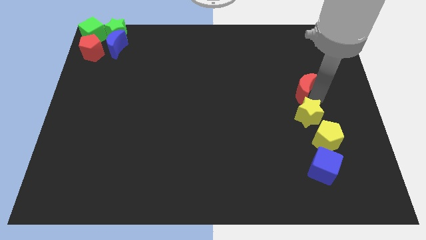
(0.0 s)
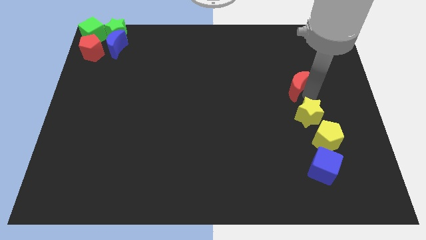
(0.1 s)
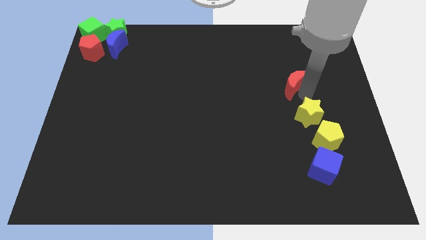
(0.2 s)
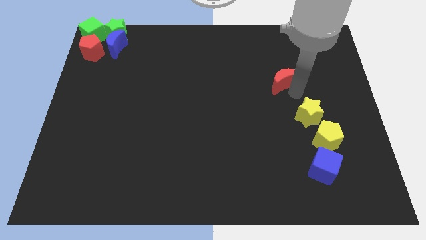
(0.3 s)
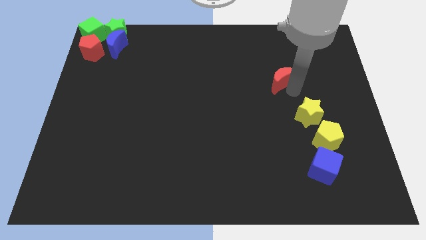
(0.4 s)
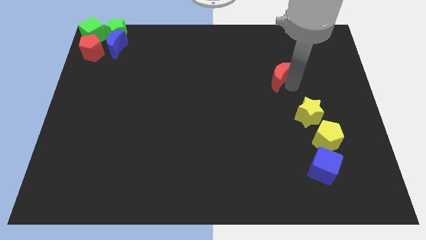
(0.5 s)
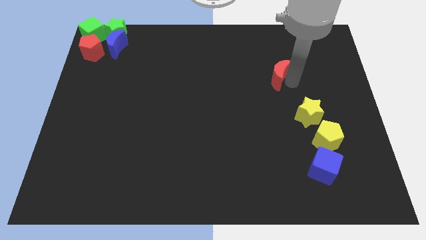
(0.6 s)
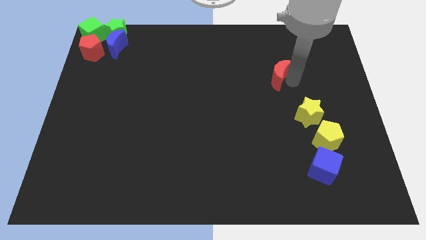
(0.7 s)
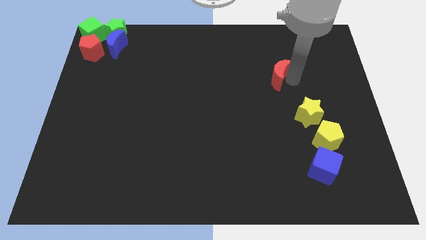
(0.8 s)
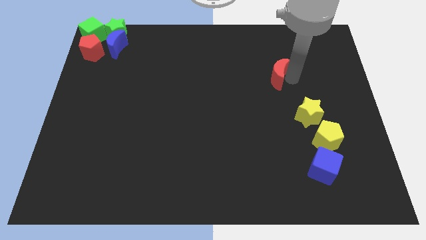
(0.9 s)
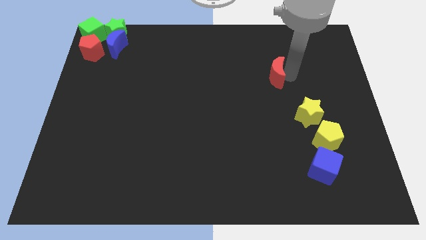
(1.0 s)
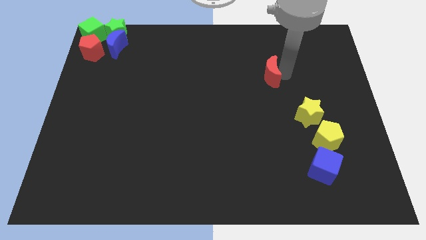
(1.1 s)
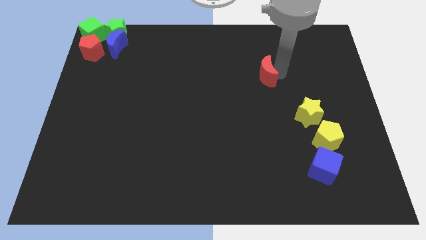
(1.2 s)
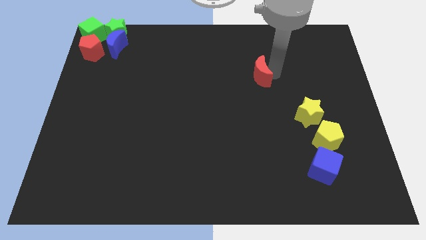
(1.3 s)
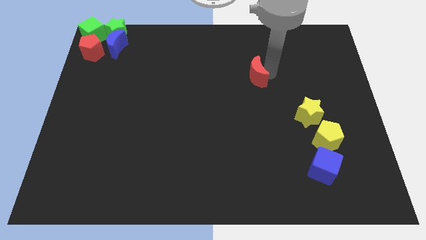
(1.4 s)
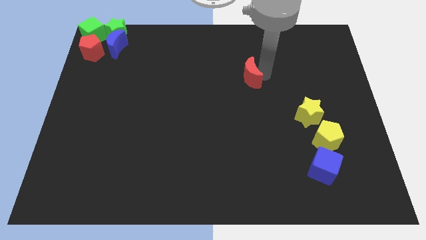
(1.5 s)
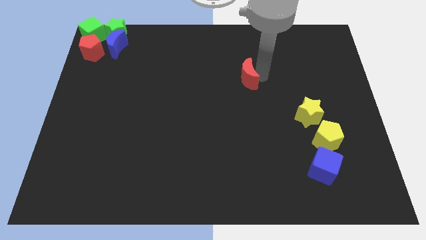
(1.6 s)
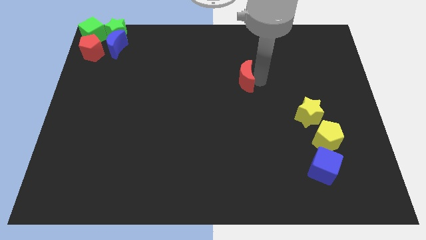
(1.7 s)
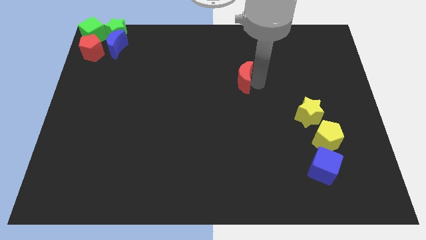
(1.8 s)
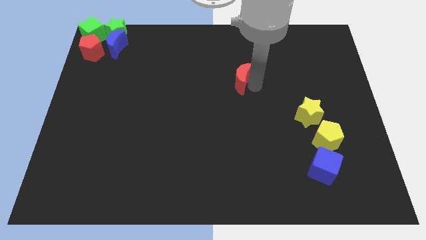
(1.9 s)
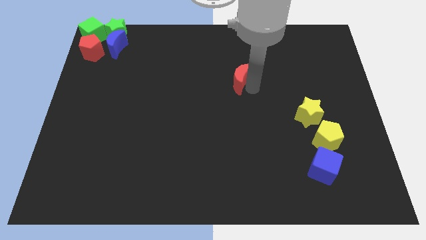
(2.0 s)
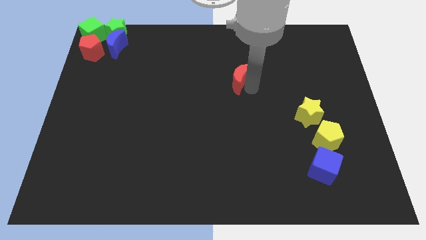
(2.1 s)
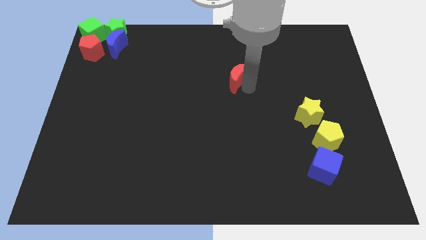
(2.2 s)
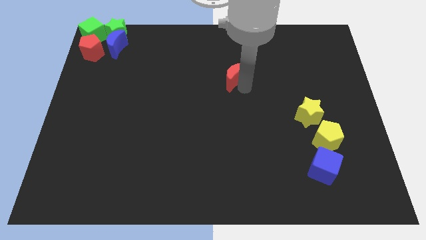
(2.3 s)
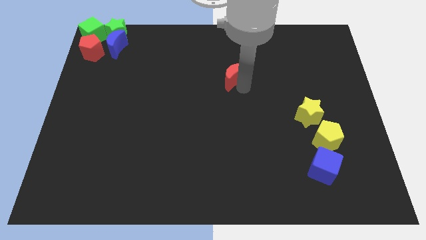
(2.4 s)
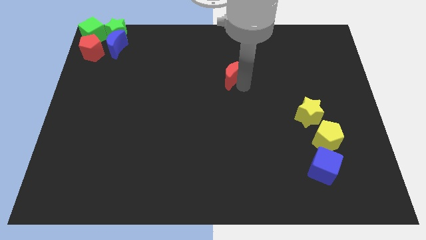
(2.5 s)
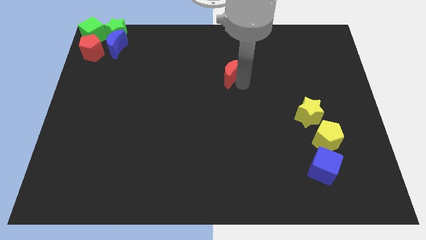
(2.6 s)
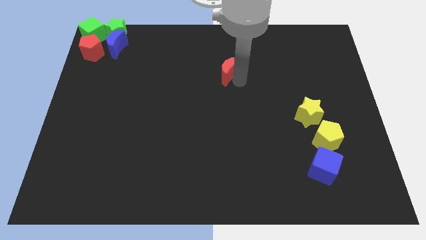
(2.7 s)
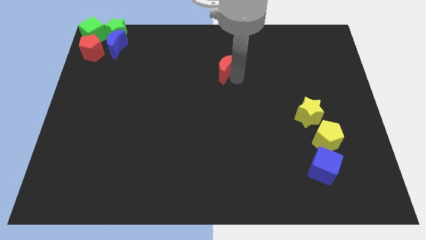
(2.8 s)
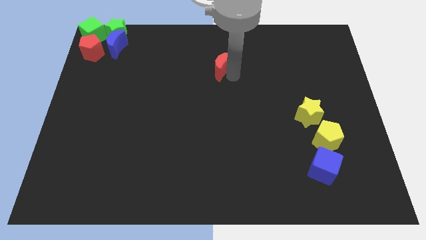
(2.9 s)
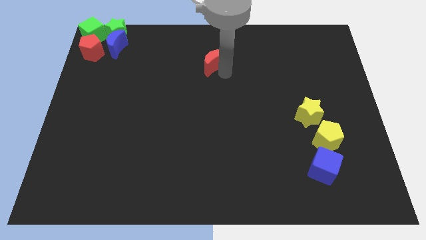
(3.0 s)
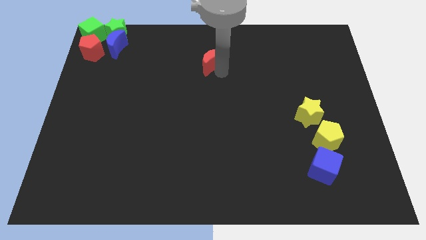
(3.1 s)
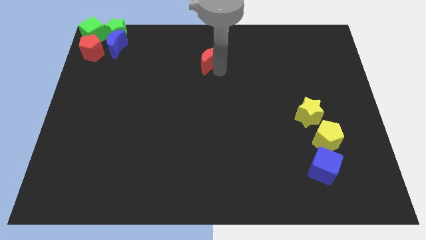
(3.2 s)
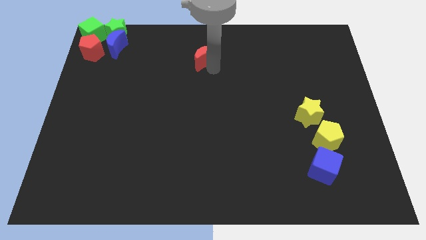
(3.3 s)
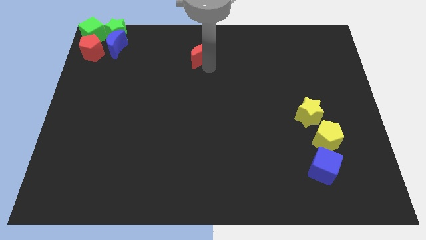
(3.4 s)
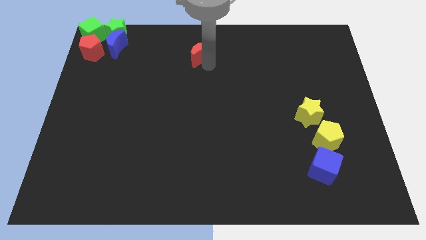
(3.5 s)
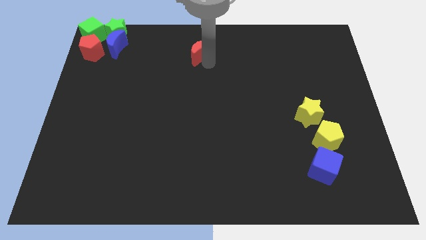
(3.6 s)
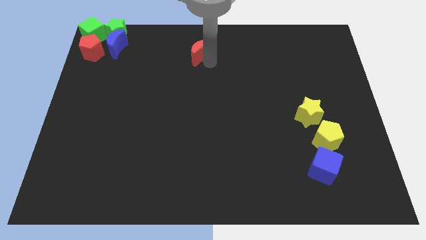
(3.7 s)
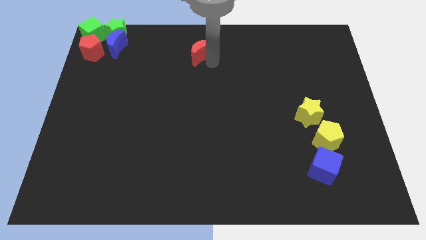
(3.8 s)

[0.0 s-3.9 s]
move the red crescent to the top center of the board

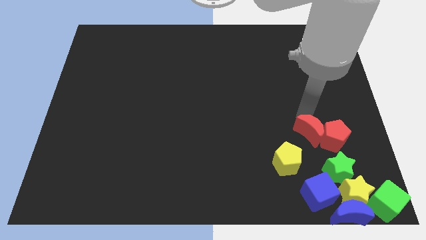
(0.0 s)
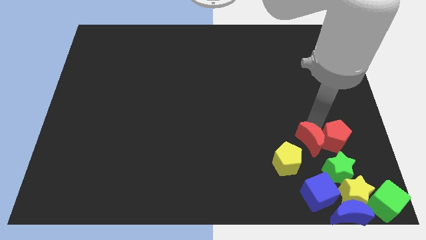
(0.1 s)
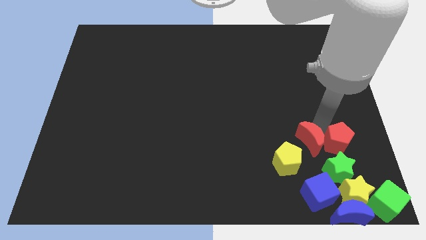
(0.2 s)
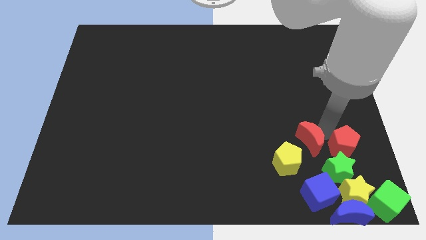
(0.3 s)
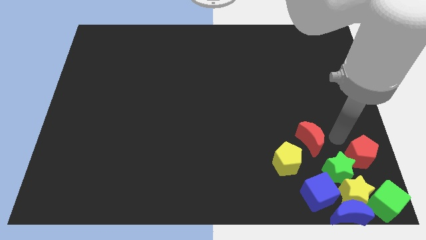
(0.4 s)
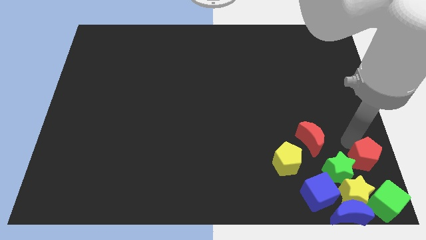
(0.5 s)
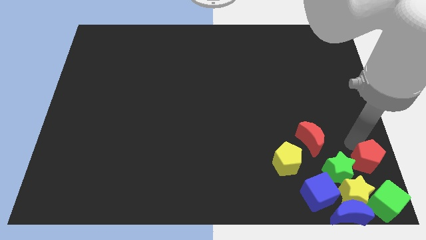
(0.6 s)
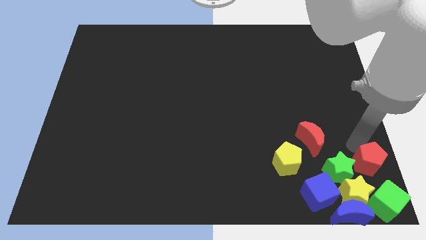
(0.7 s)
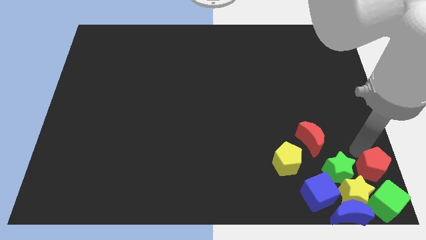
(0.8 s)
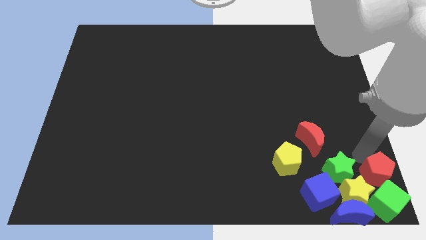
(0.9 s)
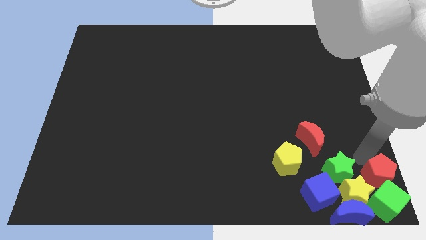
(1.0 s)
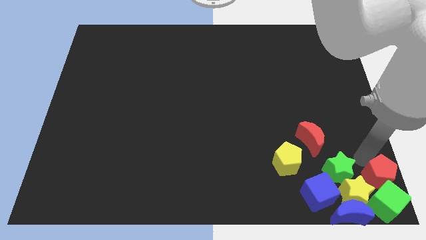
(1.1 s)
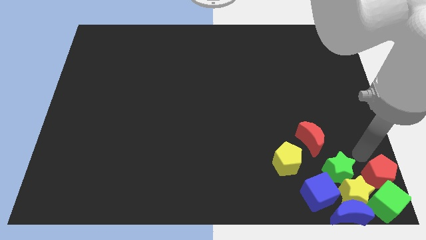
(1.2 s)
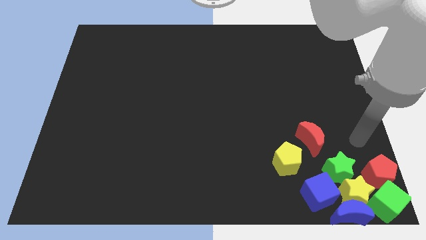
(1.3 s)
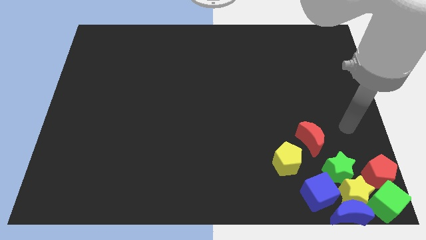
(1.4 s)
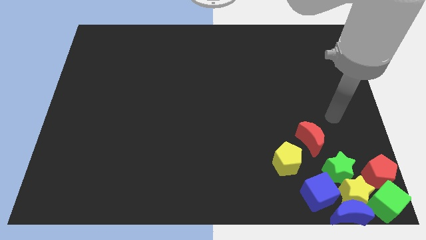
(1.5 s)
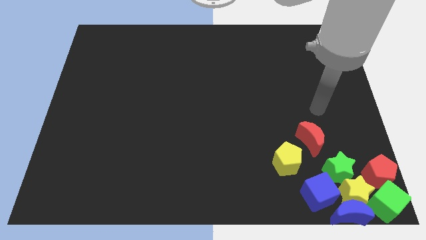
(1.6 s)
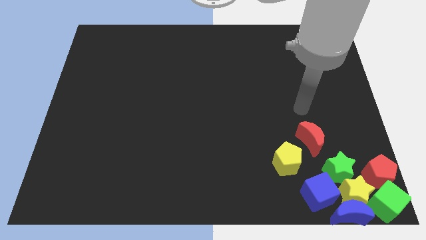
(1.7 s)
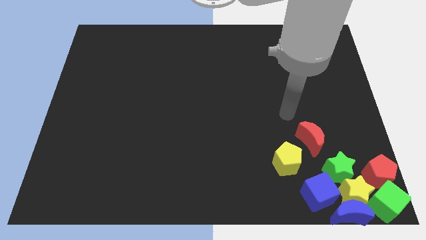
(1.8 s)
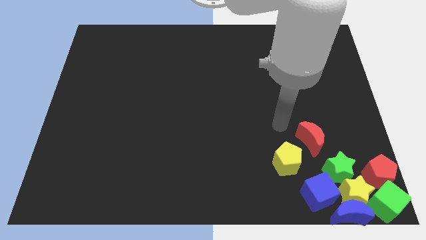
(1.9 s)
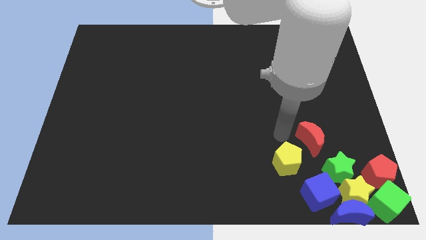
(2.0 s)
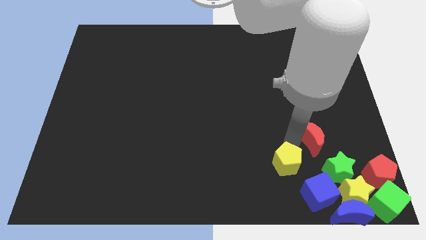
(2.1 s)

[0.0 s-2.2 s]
move the red pentagon to the top of the green cube

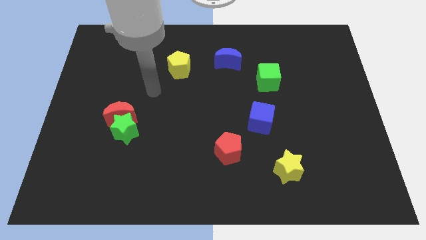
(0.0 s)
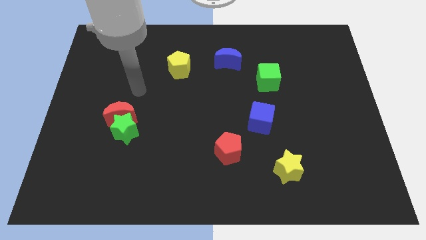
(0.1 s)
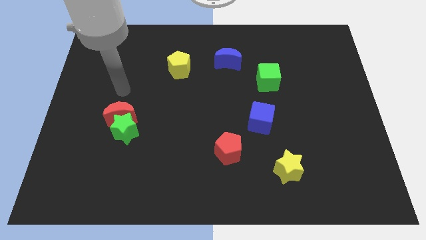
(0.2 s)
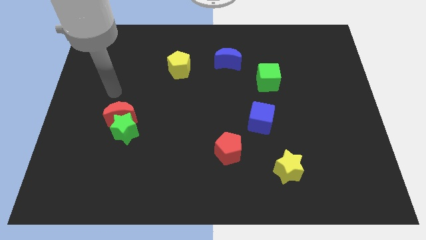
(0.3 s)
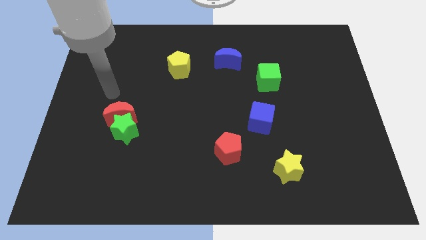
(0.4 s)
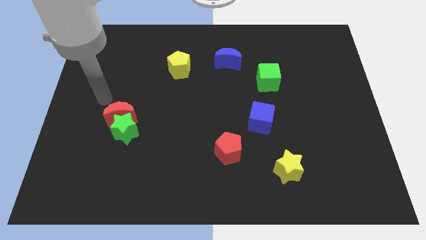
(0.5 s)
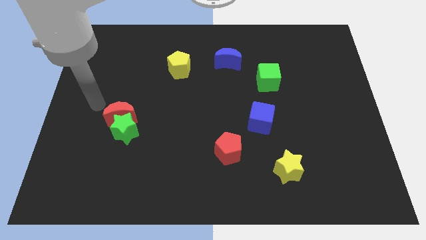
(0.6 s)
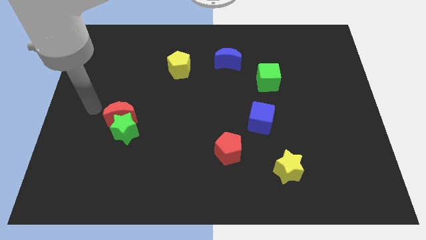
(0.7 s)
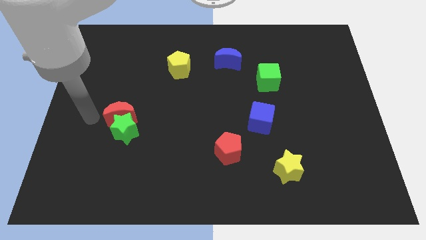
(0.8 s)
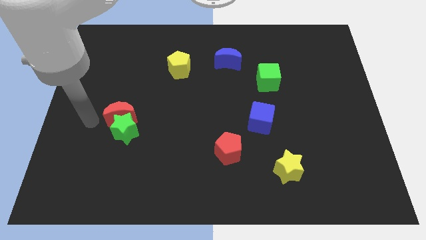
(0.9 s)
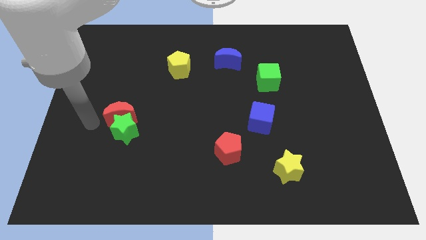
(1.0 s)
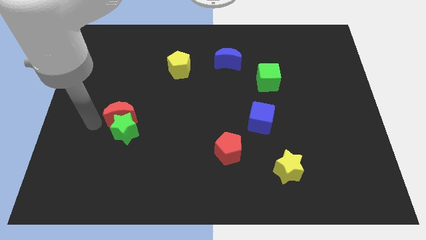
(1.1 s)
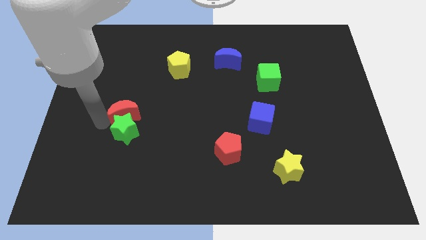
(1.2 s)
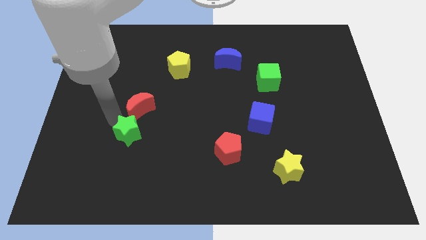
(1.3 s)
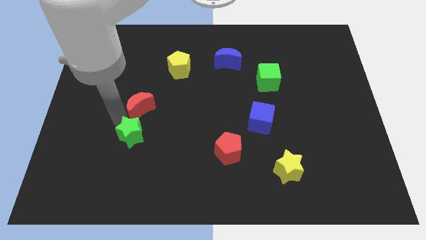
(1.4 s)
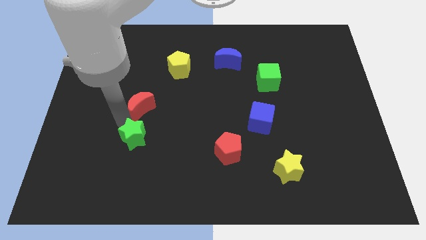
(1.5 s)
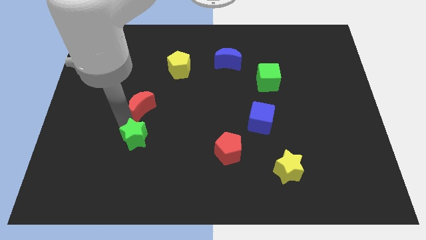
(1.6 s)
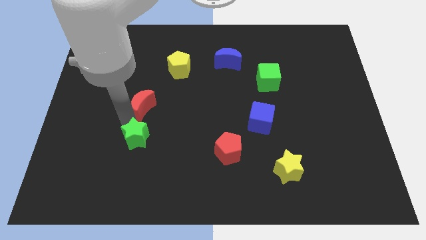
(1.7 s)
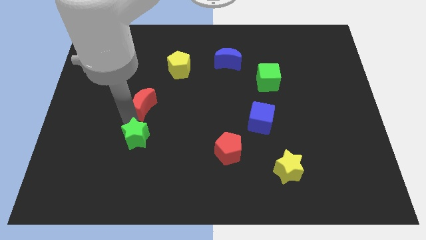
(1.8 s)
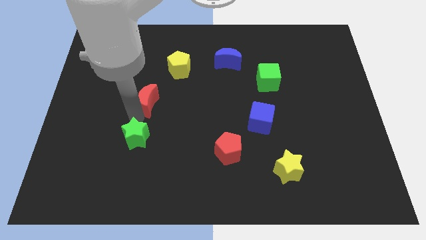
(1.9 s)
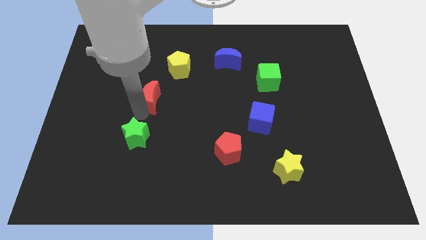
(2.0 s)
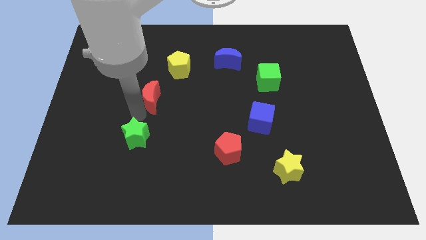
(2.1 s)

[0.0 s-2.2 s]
separate the red crescent from the green star

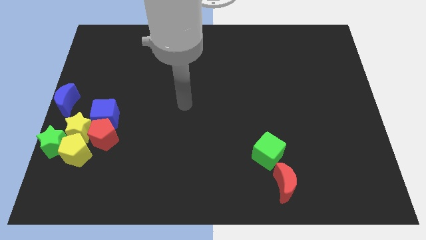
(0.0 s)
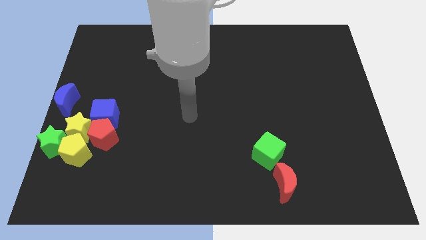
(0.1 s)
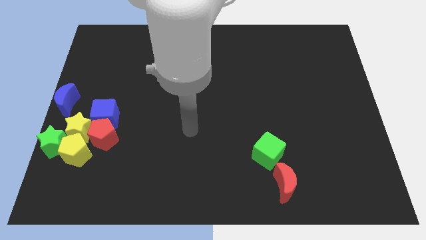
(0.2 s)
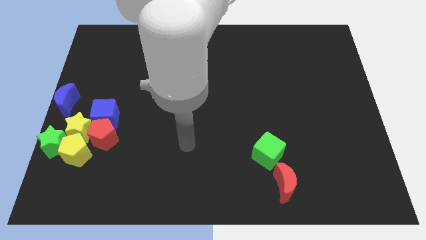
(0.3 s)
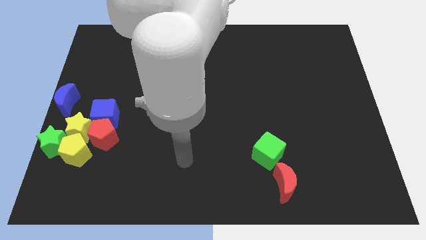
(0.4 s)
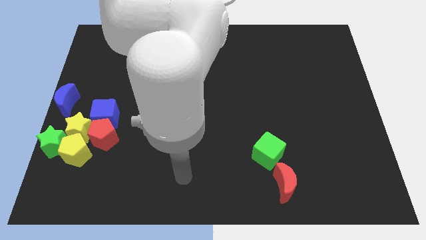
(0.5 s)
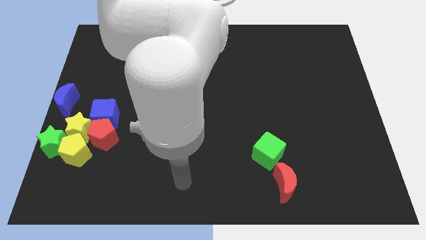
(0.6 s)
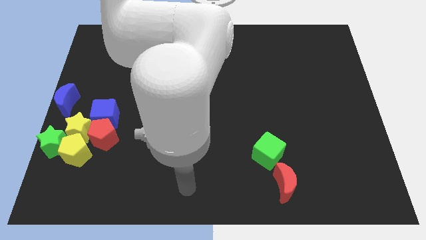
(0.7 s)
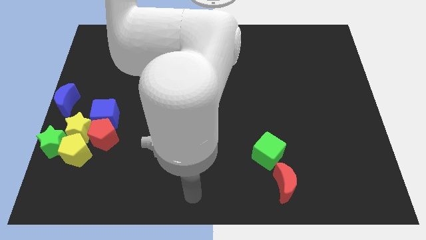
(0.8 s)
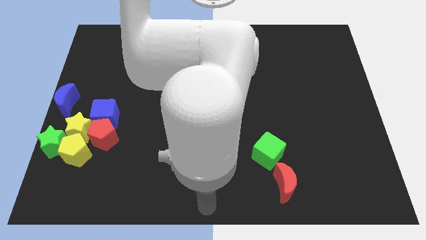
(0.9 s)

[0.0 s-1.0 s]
move your arm to the bottom center
